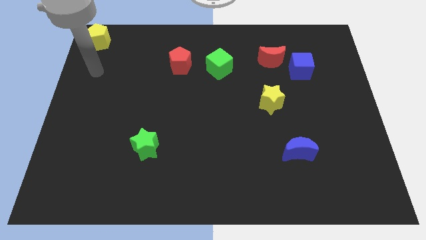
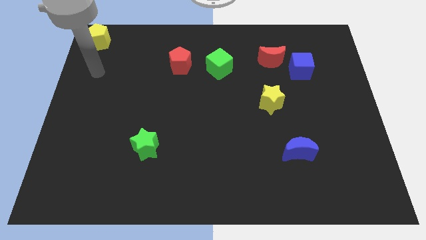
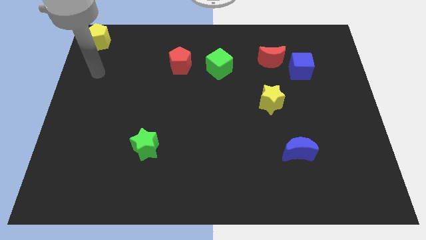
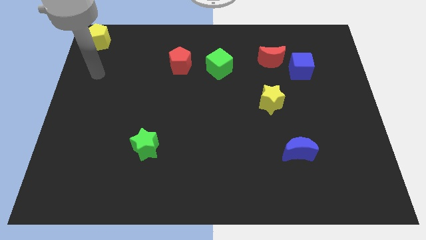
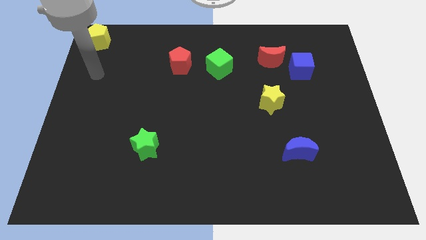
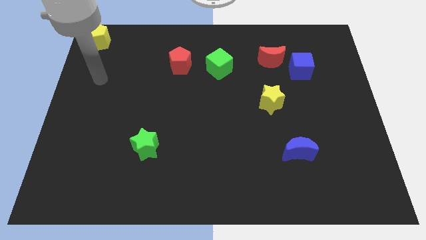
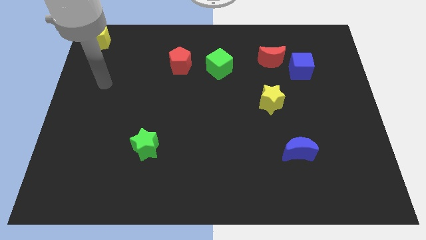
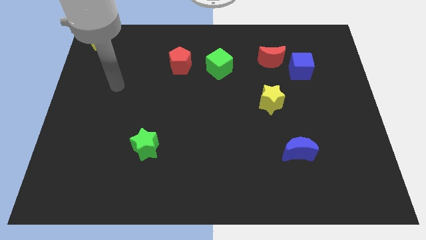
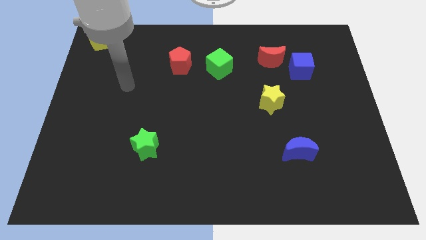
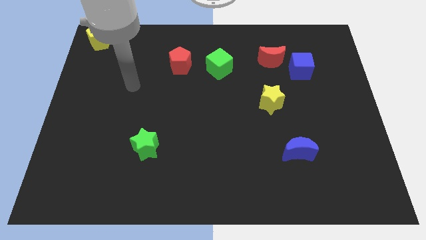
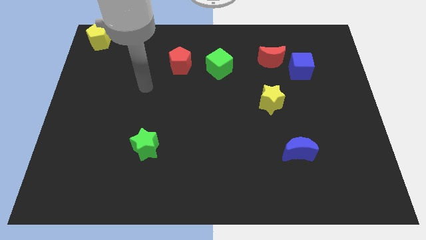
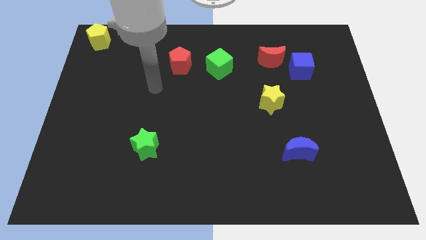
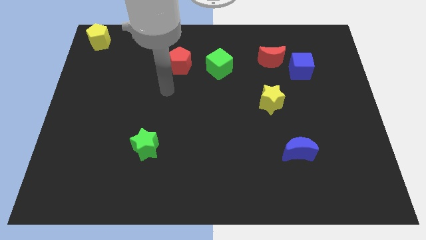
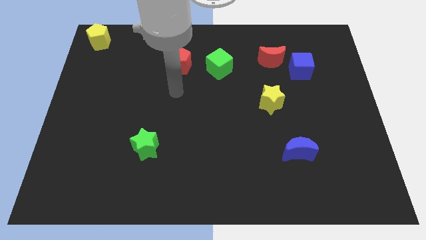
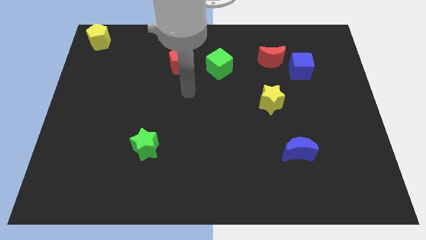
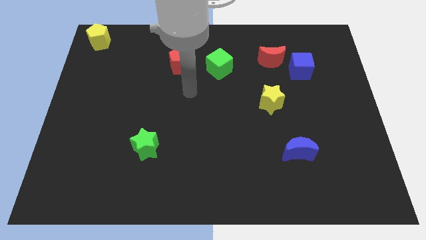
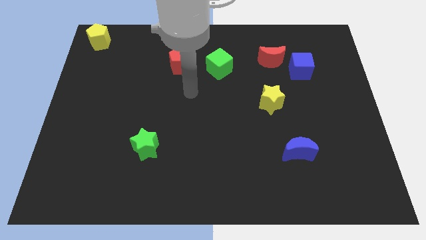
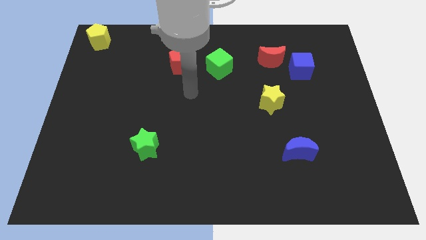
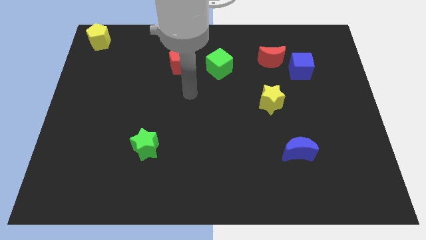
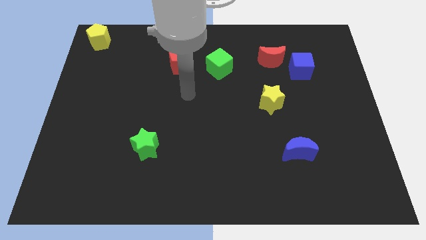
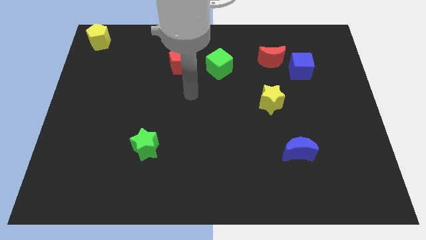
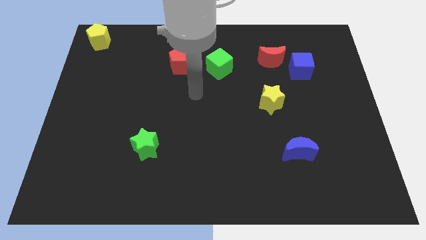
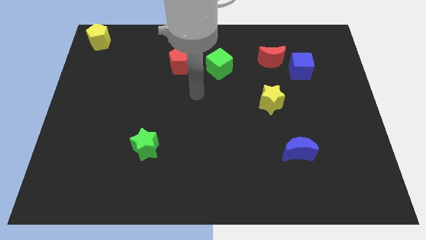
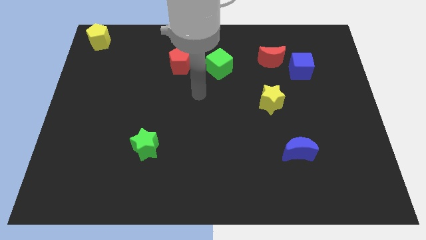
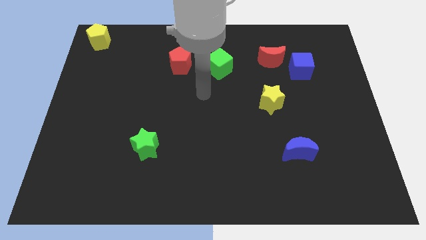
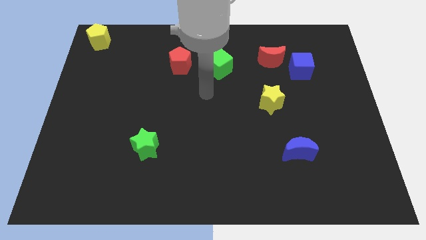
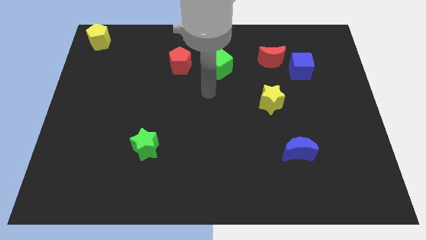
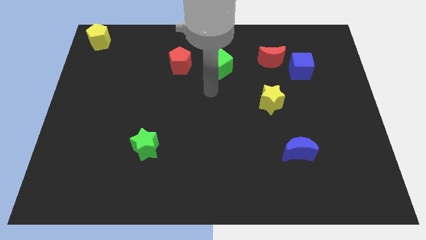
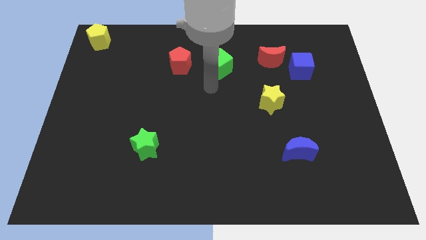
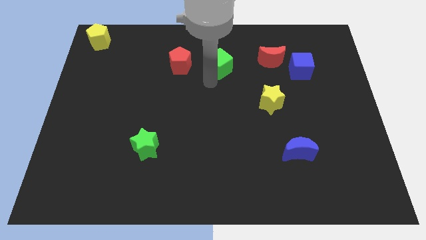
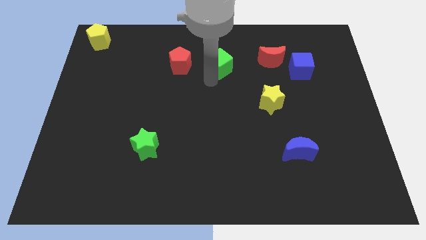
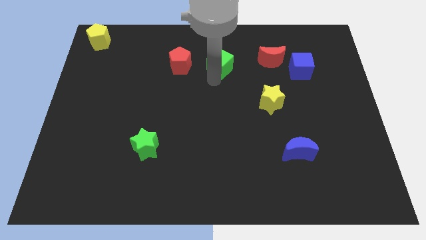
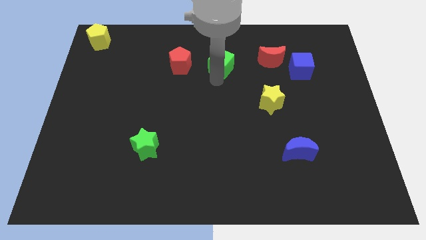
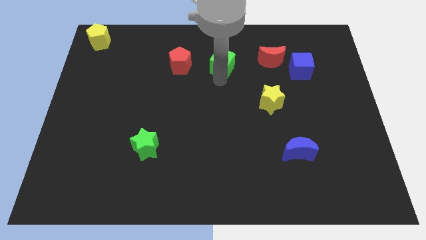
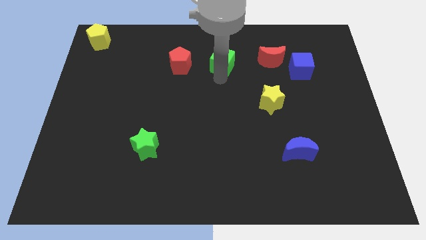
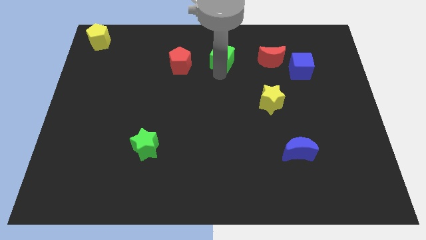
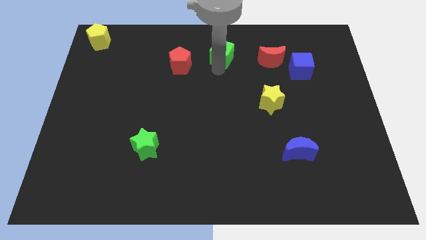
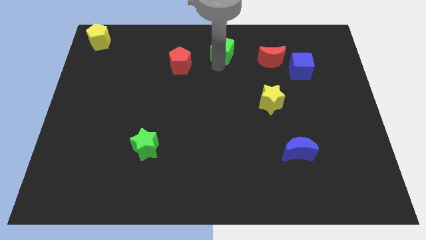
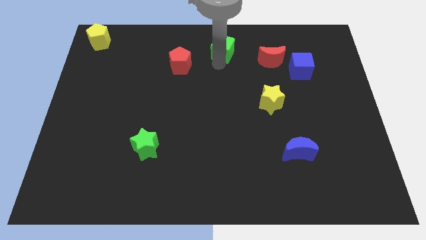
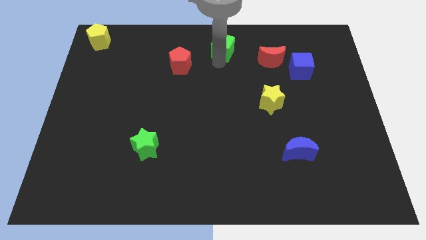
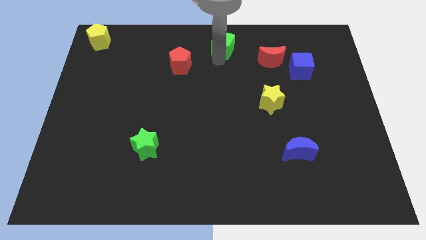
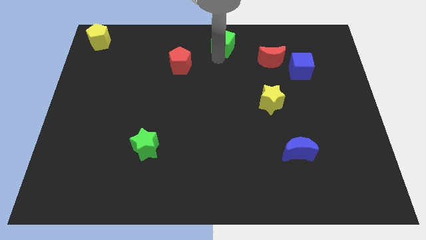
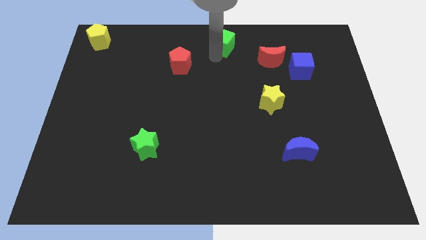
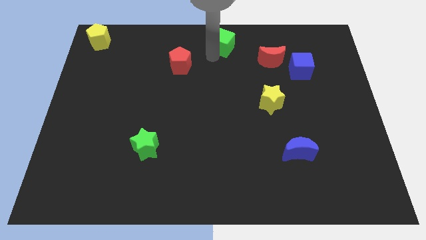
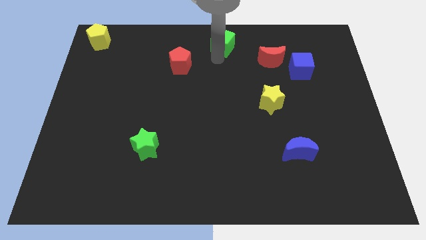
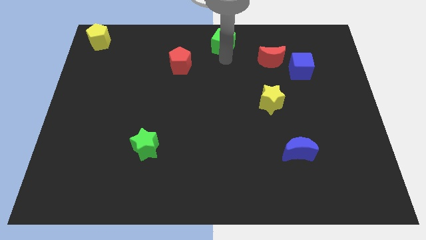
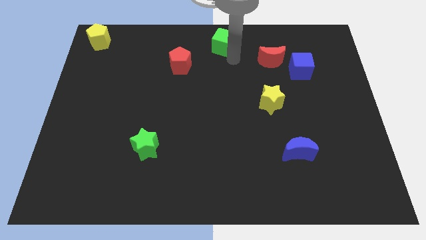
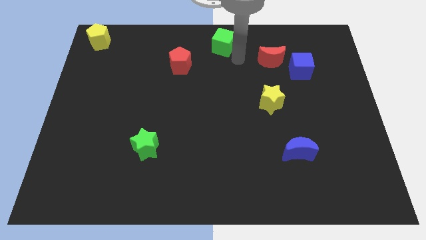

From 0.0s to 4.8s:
push the green cube to the top of the board

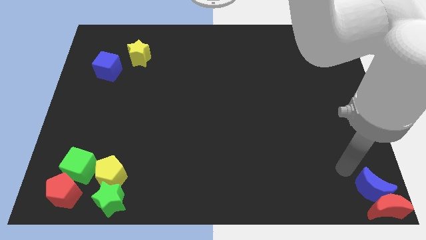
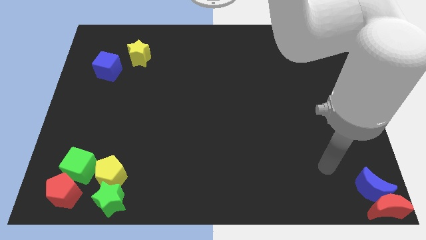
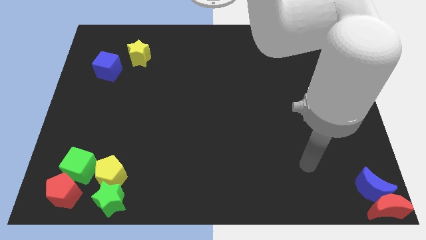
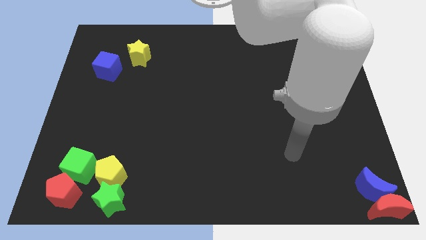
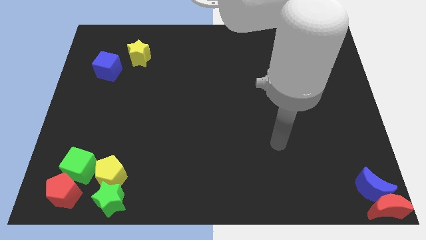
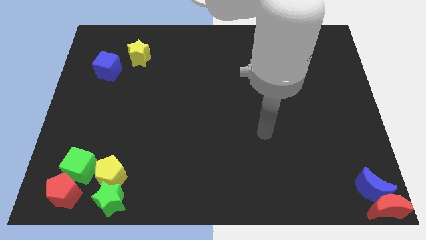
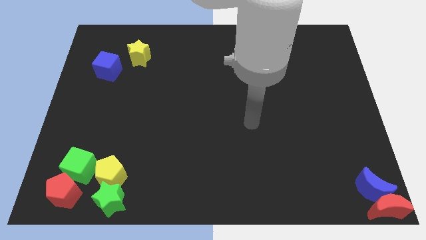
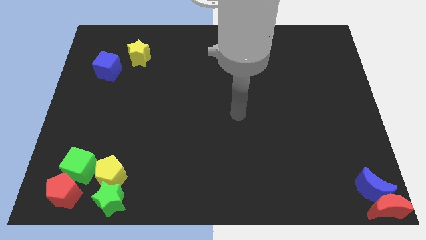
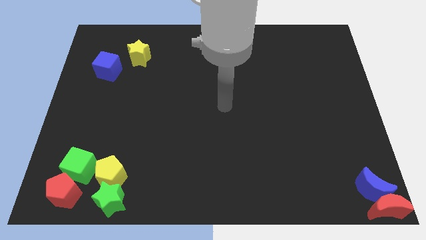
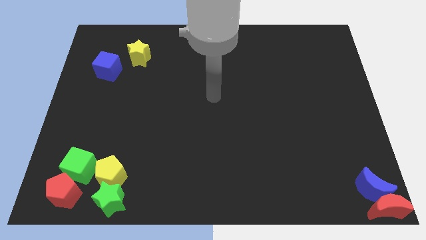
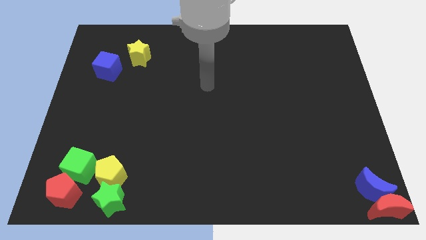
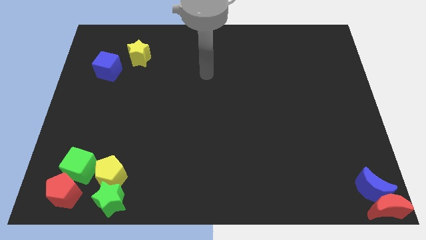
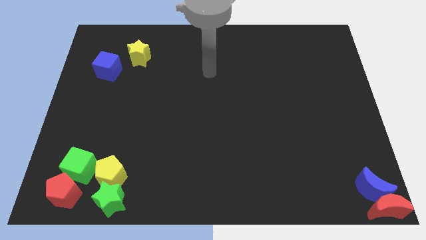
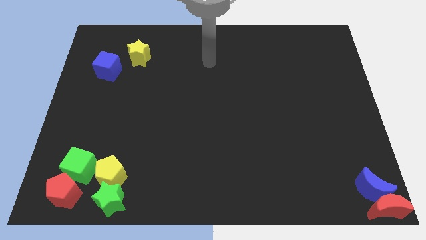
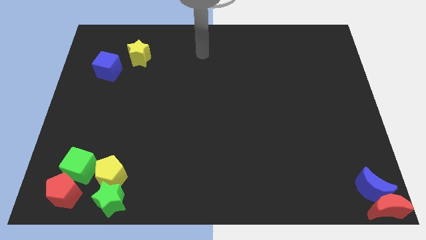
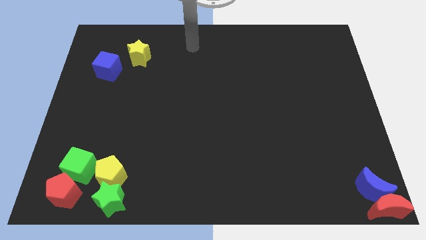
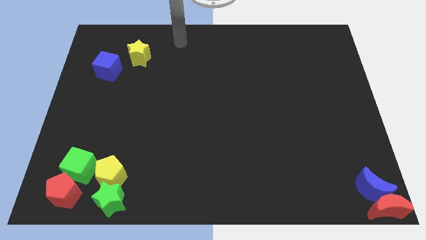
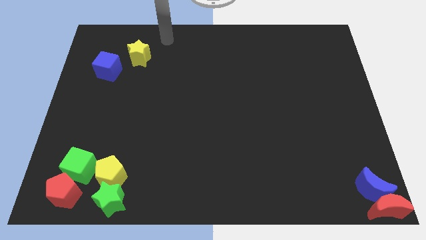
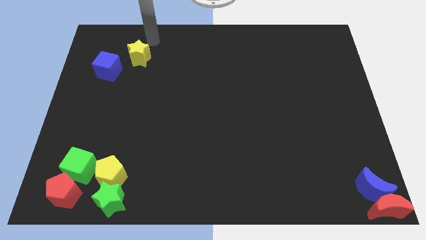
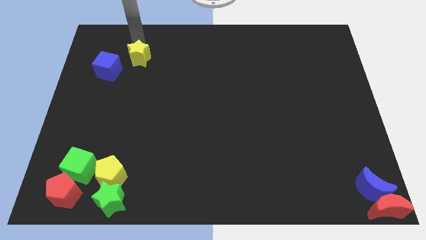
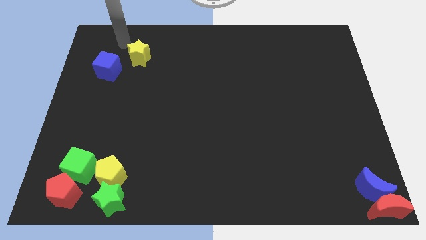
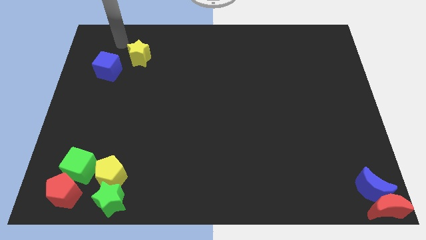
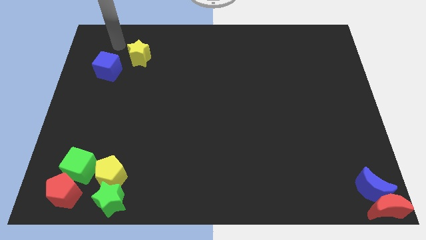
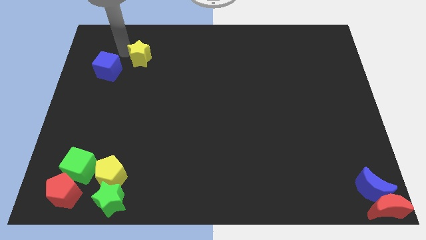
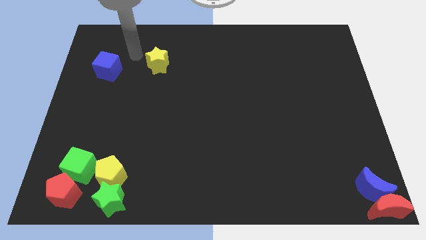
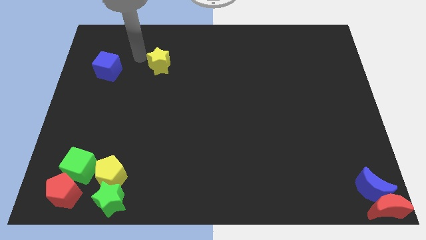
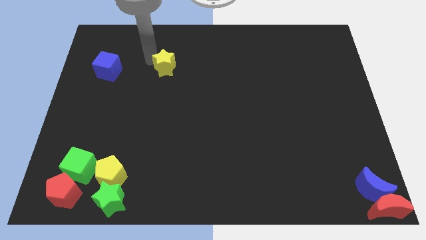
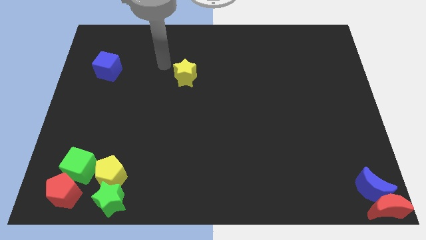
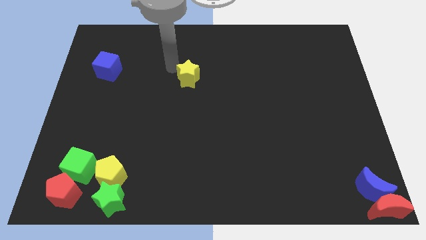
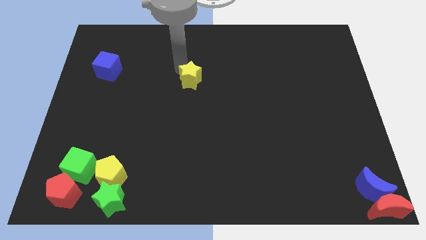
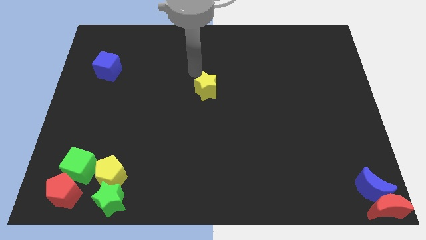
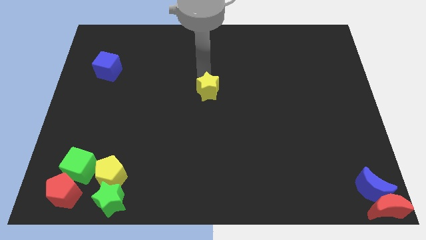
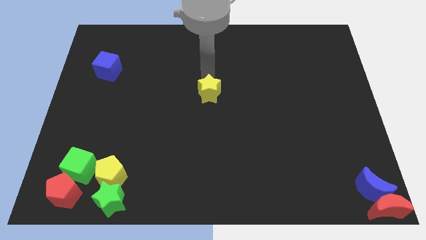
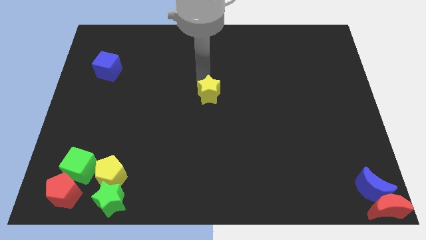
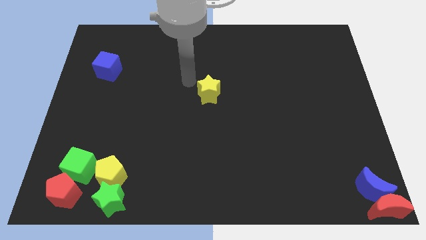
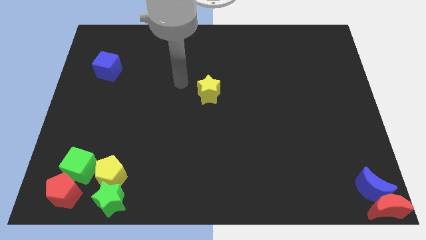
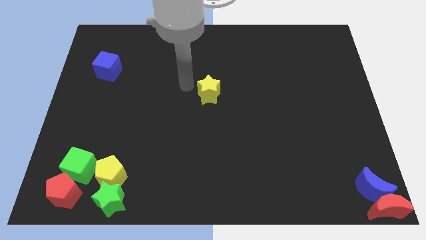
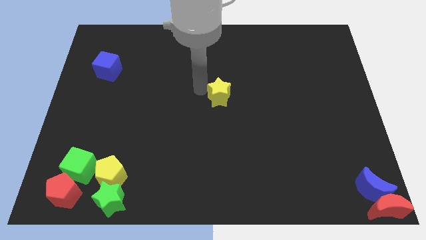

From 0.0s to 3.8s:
push the yellow star to the center of the board

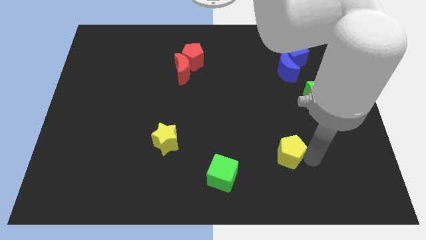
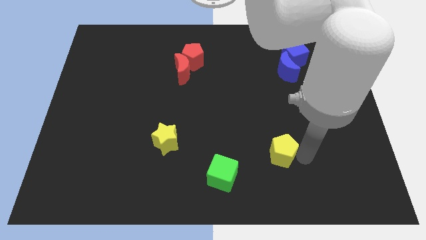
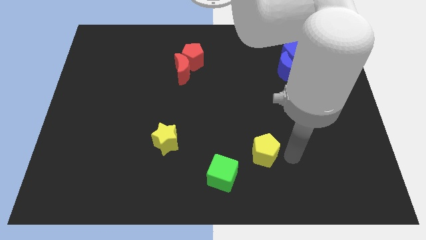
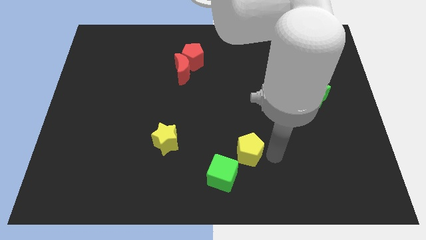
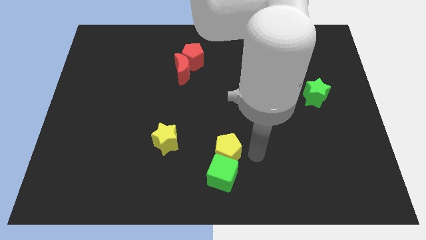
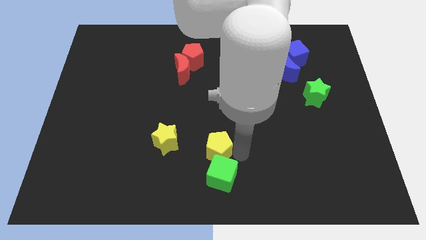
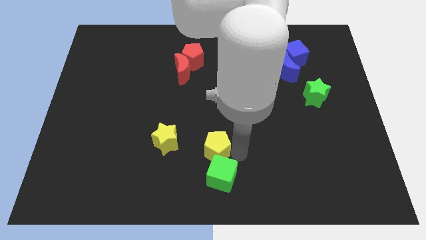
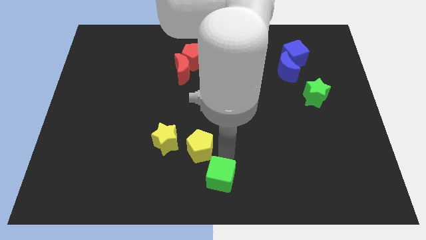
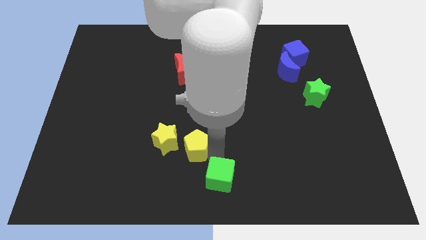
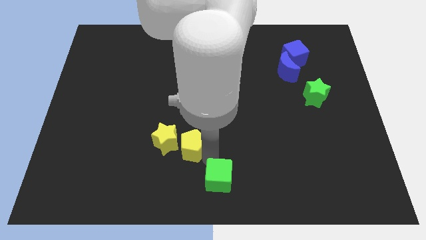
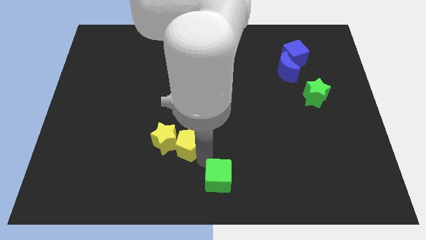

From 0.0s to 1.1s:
push the yellow pentagon close to the yellow star
